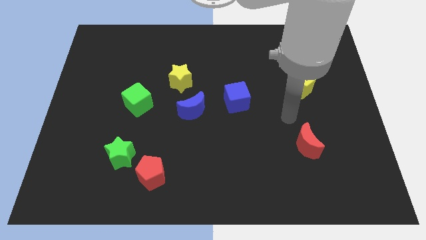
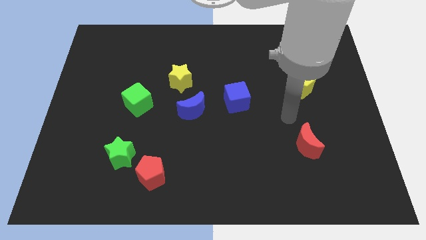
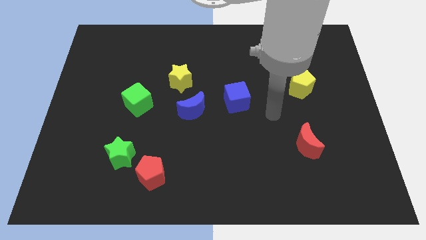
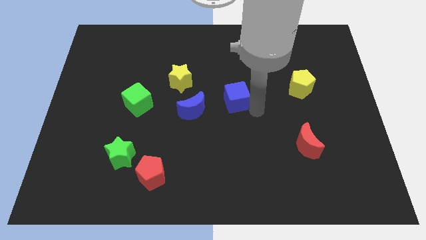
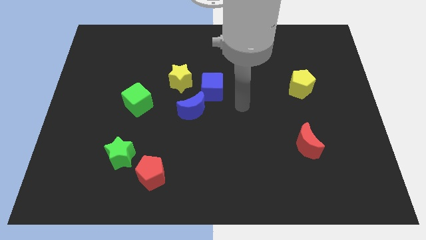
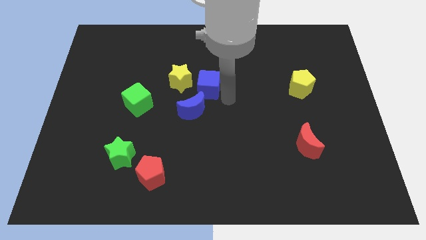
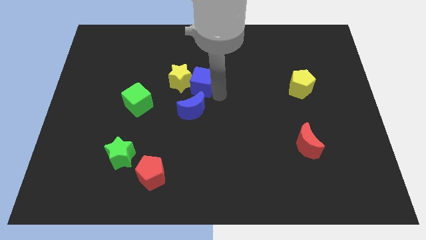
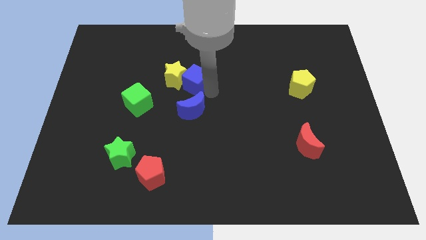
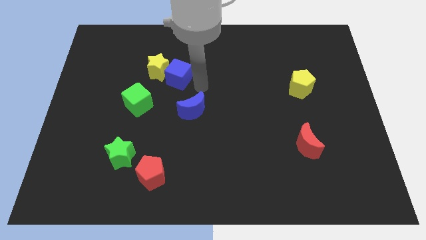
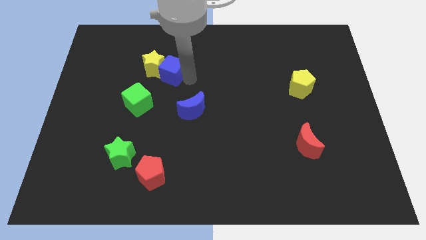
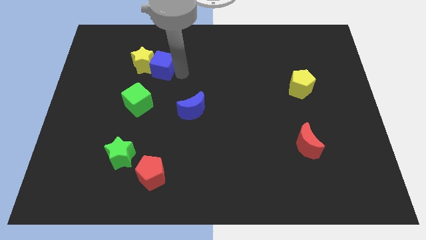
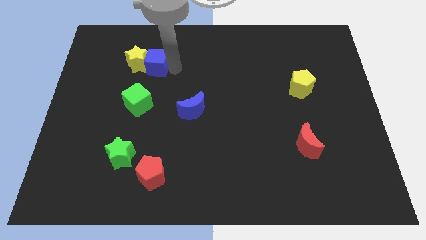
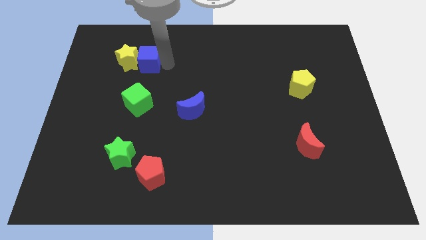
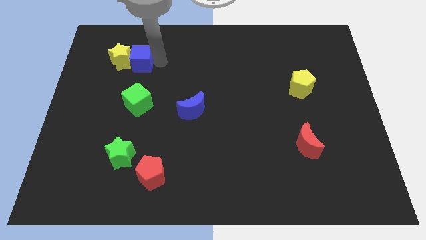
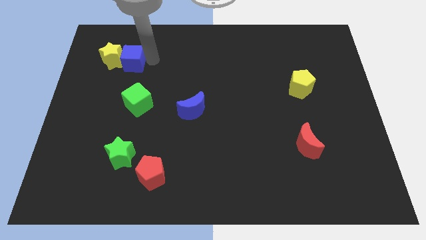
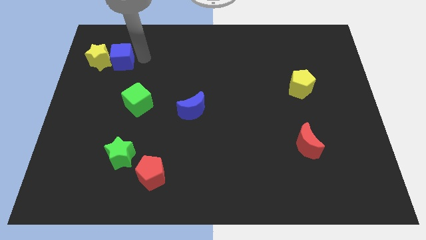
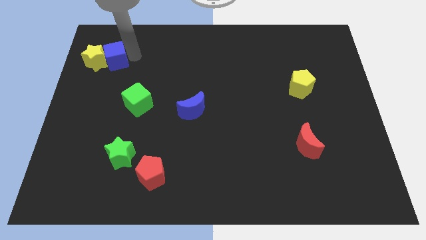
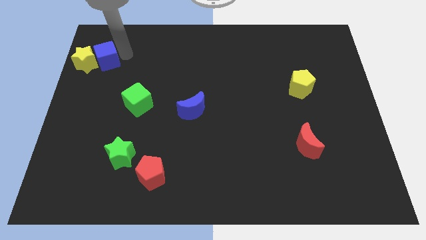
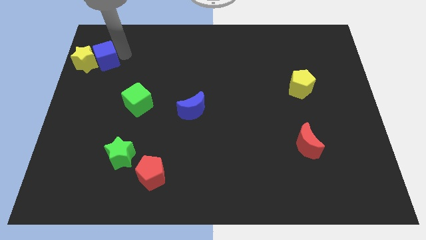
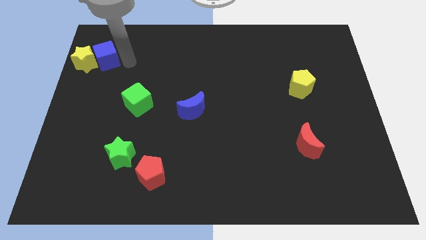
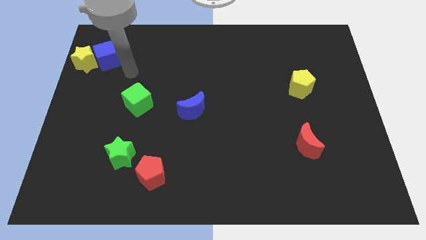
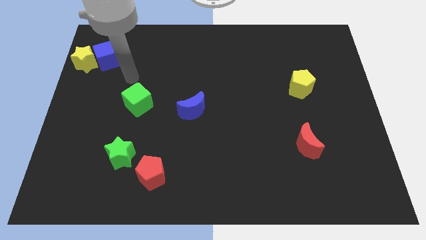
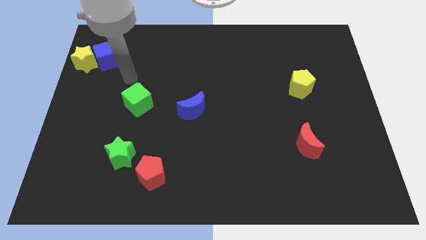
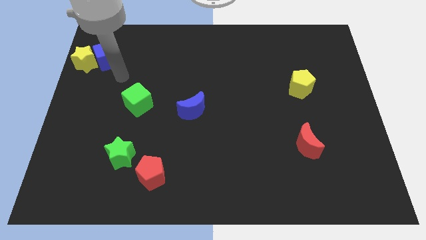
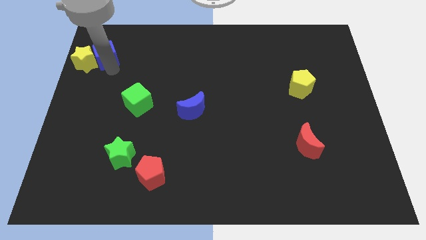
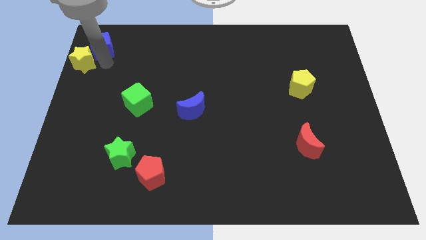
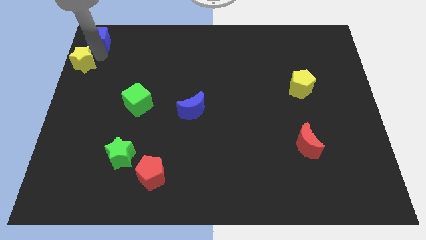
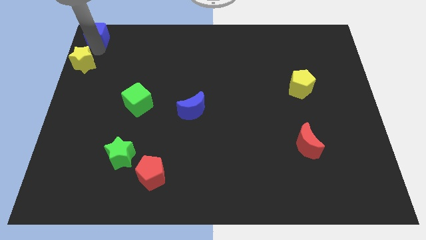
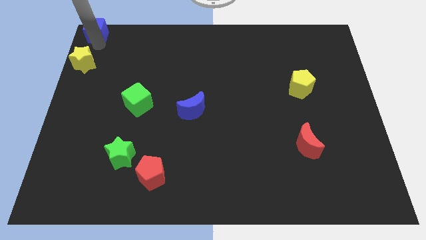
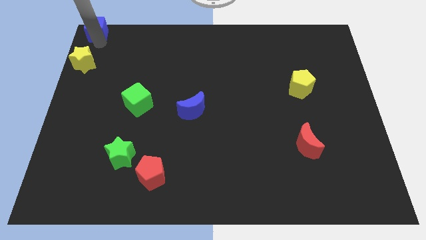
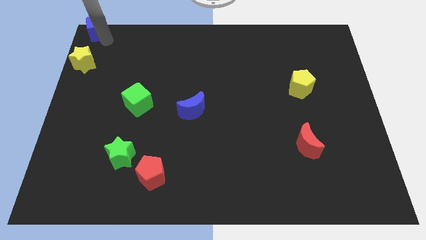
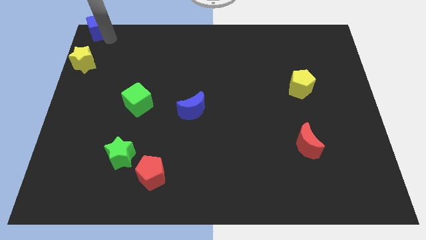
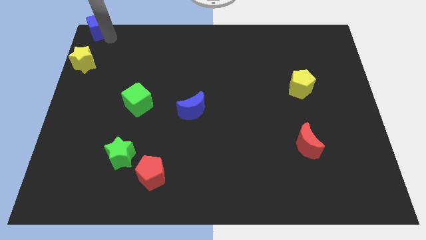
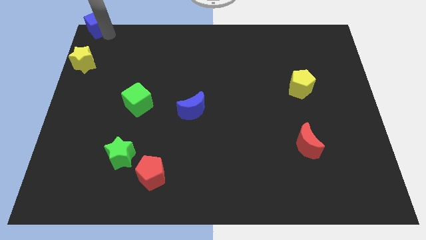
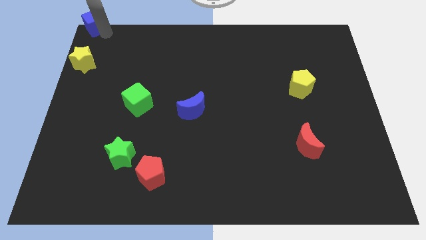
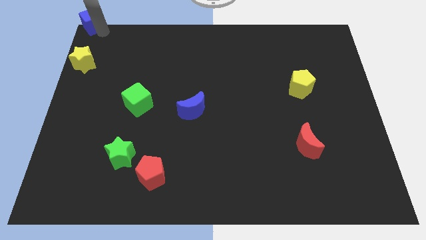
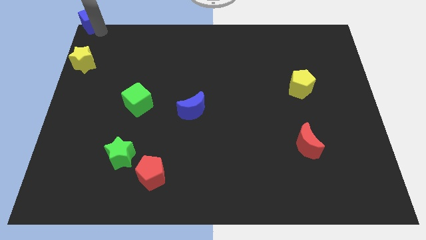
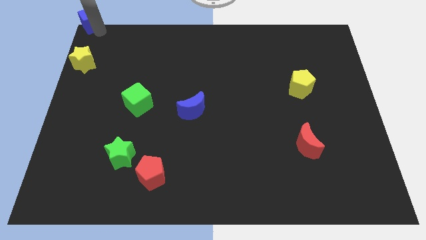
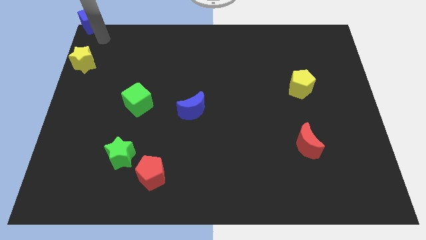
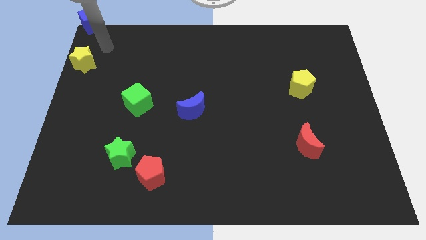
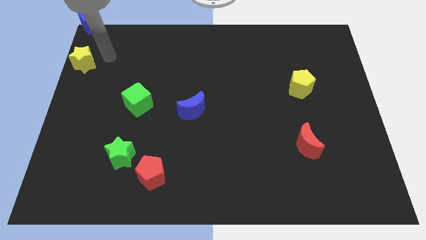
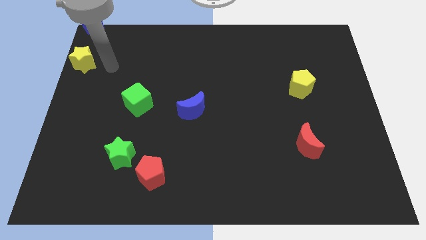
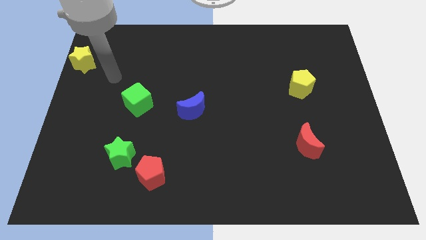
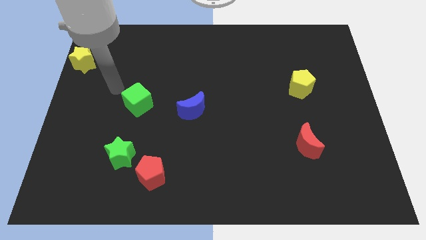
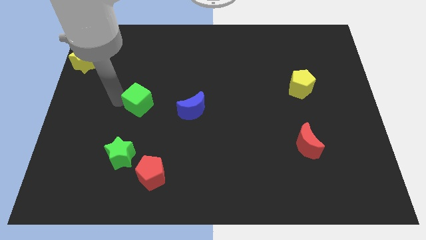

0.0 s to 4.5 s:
push the blue cube into the yellow star

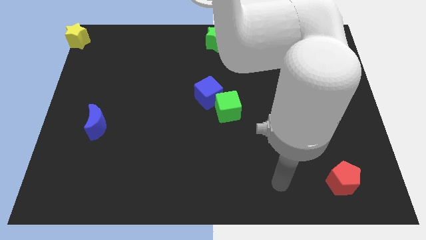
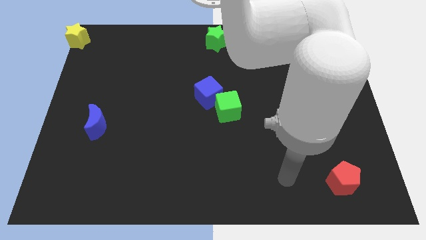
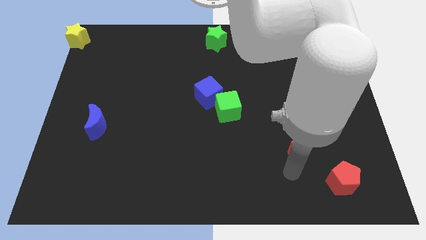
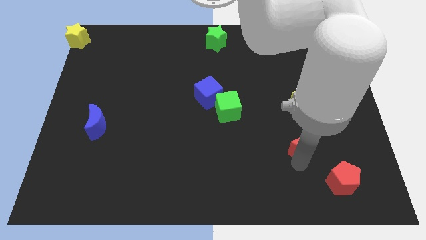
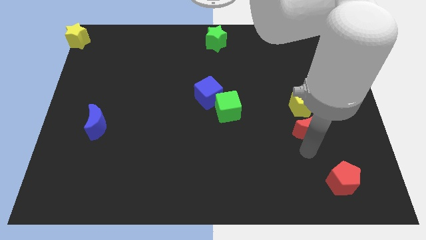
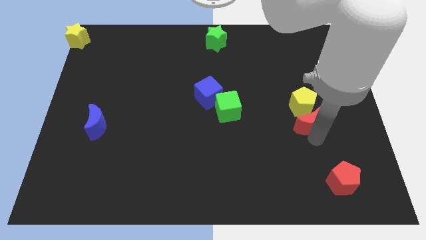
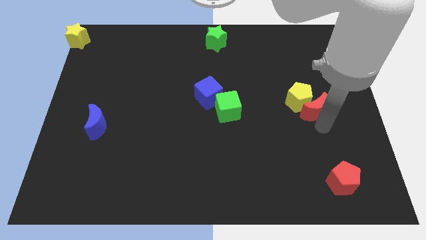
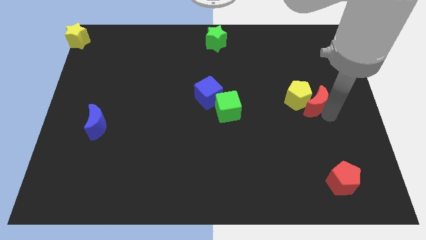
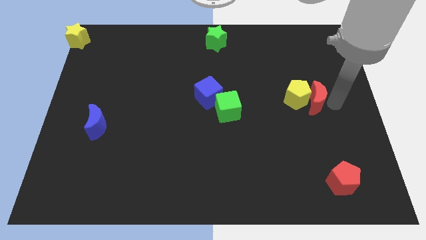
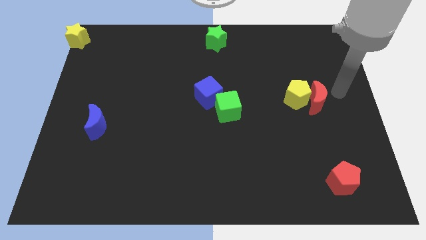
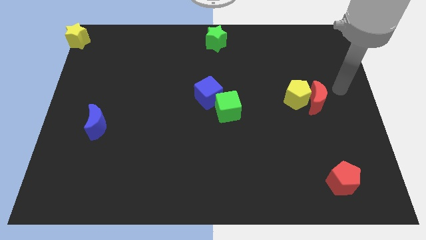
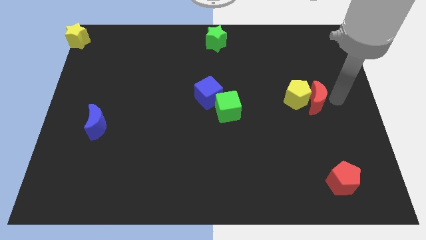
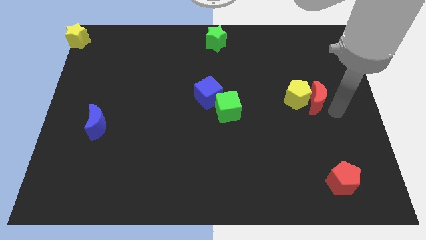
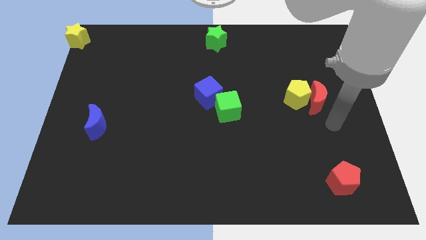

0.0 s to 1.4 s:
push the red crescent into the yellow pentagon

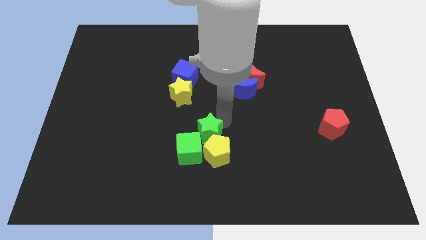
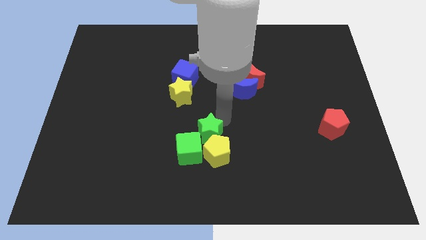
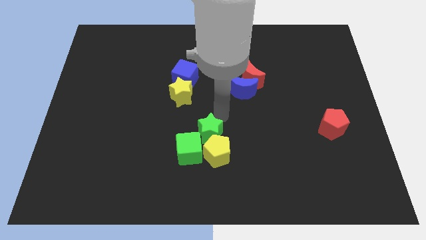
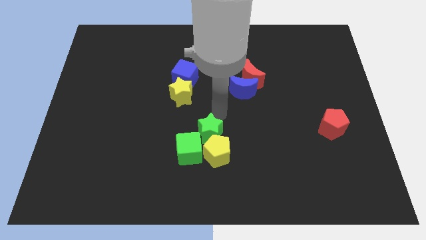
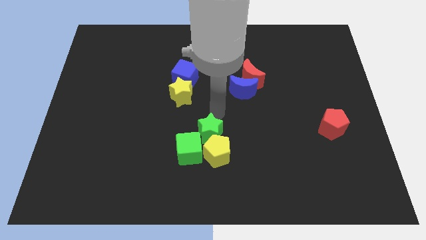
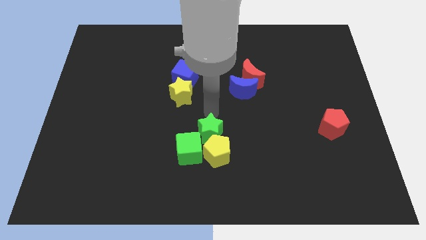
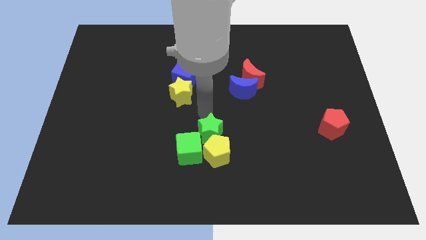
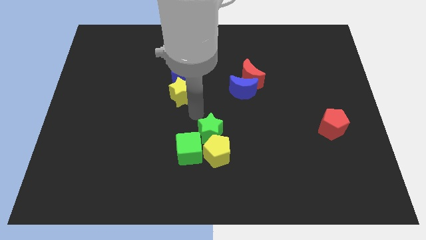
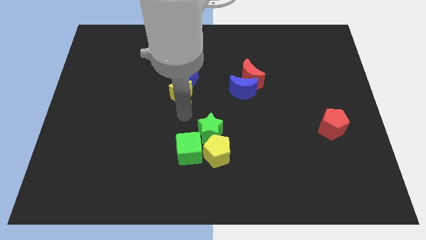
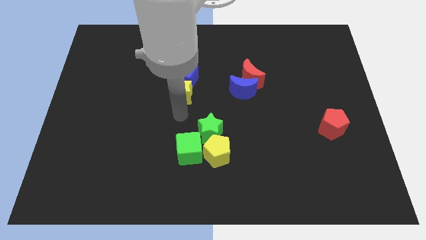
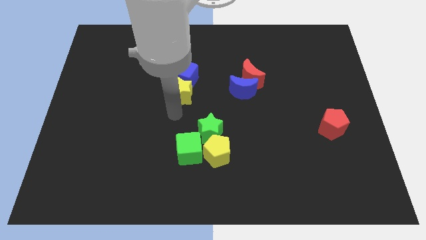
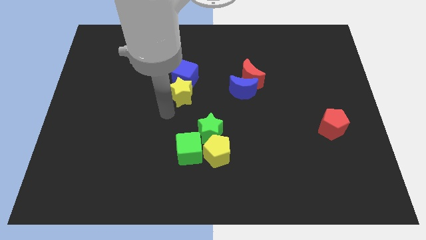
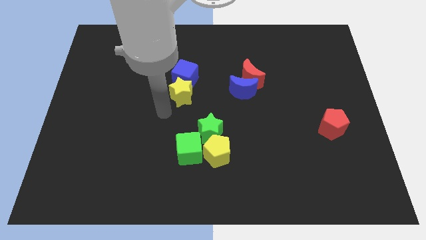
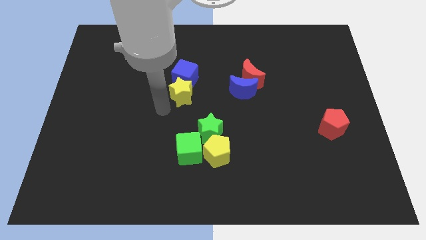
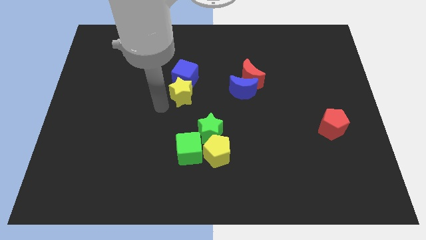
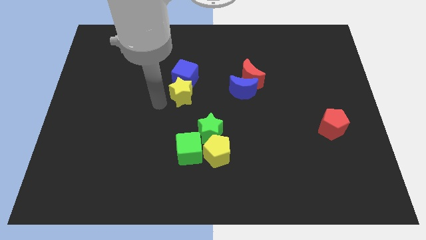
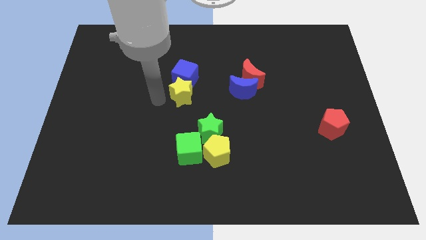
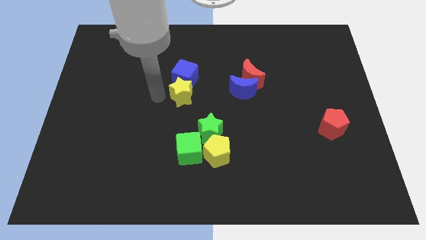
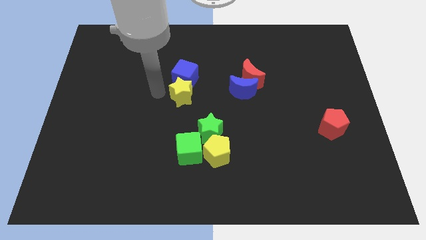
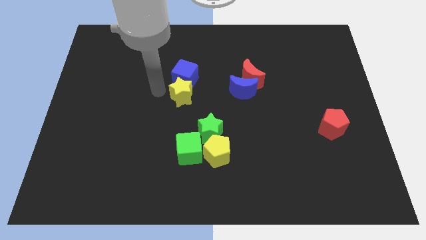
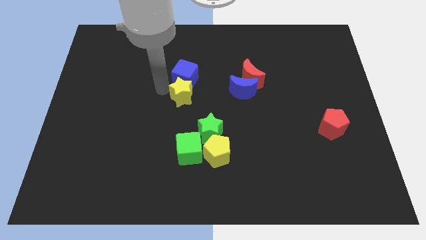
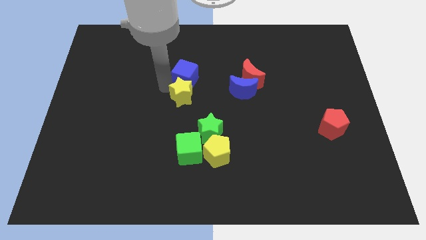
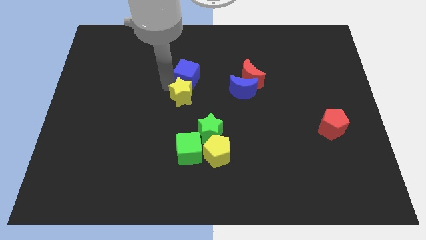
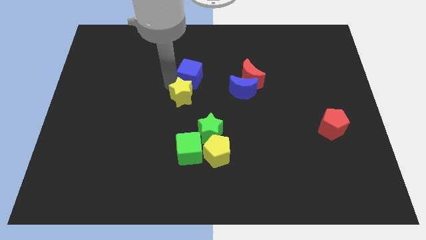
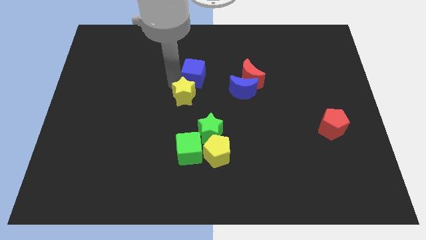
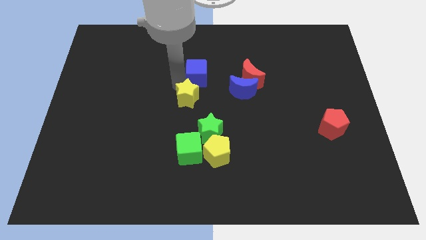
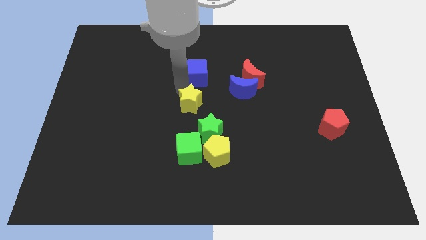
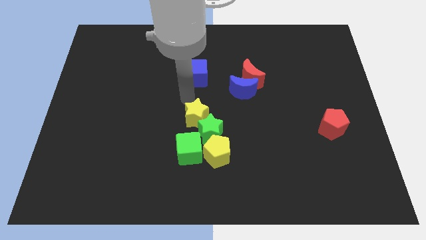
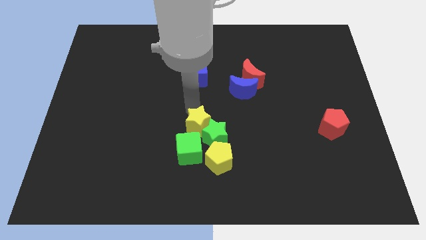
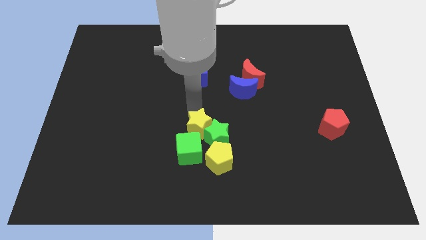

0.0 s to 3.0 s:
separate the yellow star from the blue cube
